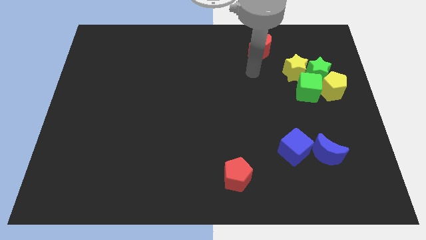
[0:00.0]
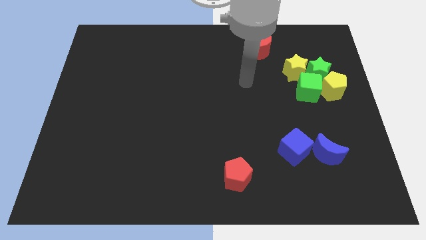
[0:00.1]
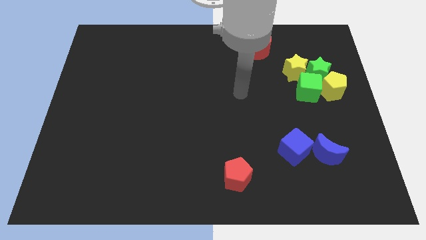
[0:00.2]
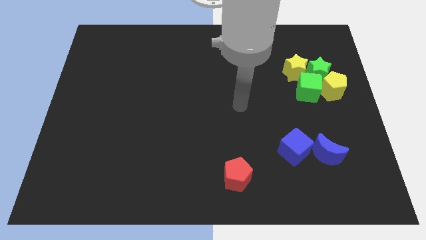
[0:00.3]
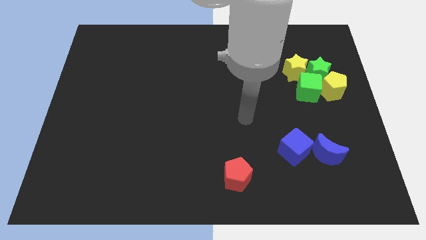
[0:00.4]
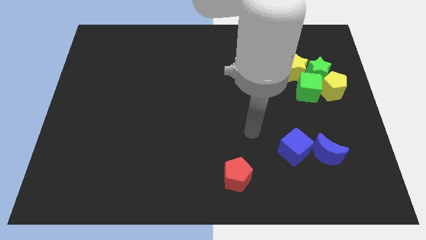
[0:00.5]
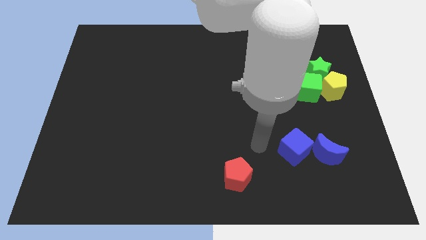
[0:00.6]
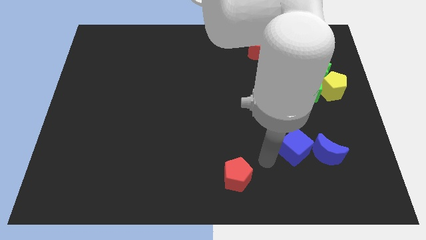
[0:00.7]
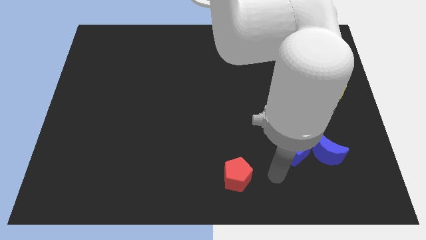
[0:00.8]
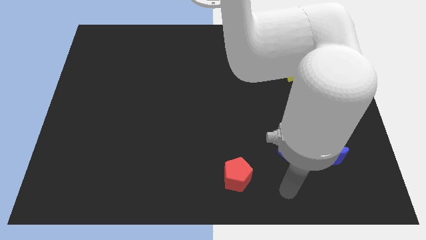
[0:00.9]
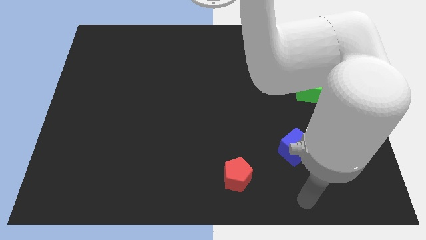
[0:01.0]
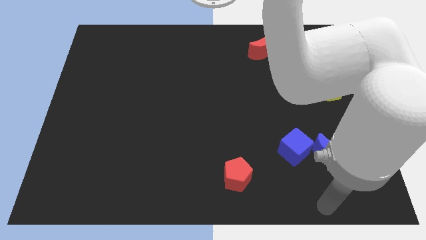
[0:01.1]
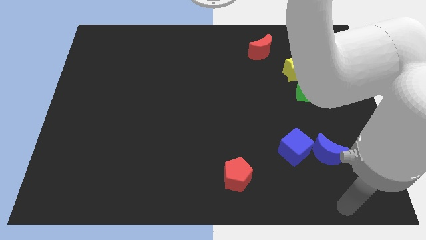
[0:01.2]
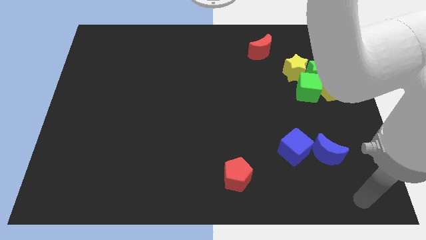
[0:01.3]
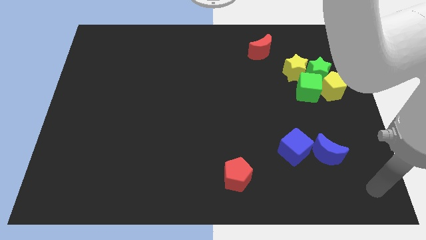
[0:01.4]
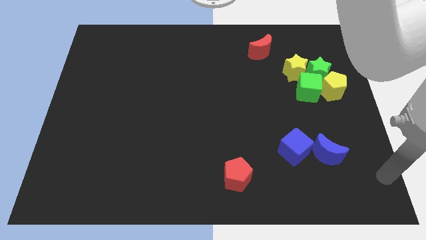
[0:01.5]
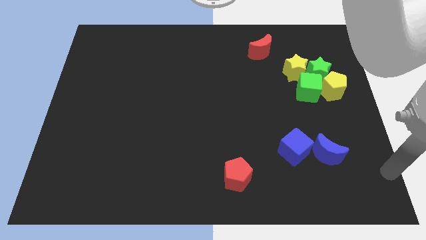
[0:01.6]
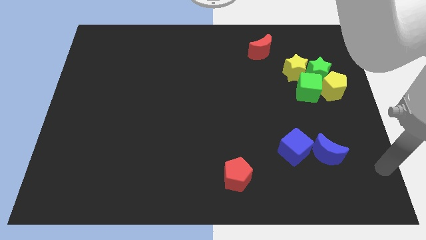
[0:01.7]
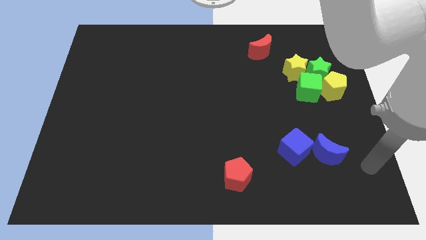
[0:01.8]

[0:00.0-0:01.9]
move yourself away from the red moon

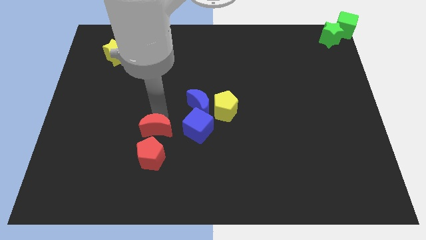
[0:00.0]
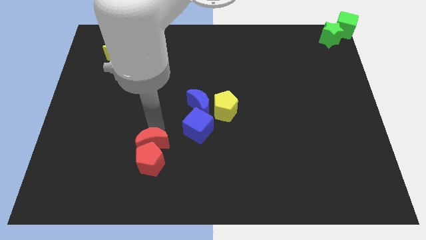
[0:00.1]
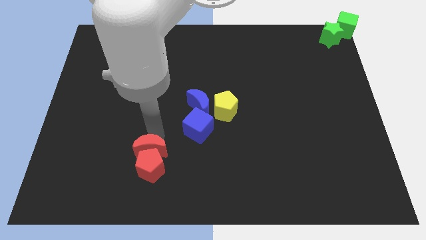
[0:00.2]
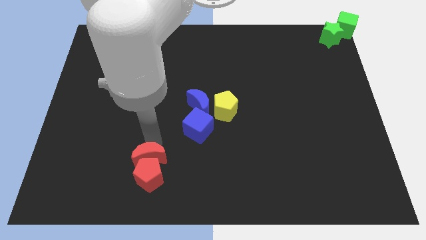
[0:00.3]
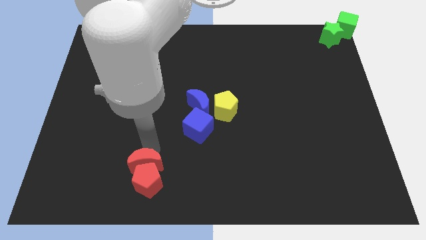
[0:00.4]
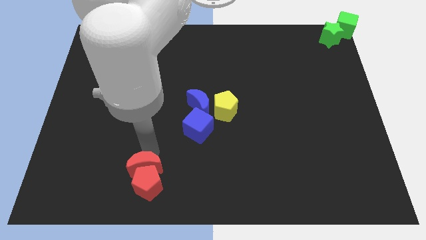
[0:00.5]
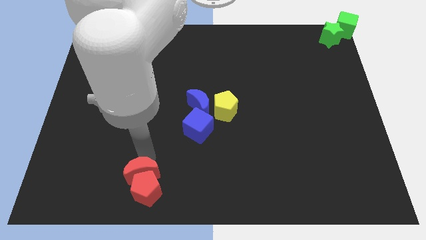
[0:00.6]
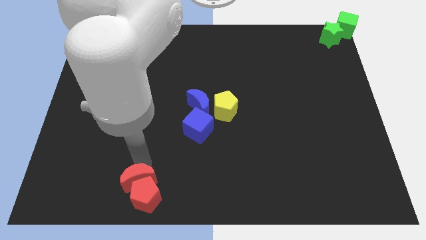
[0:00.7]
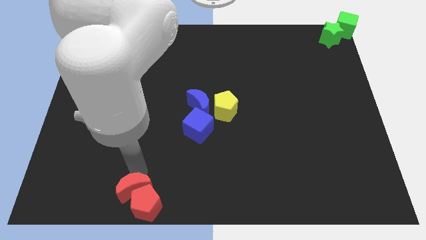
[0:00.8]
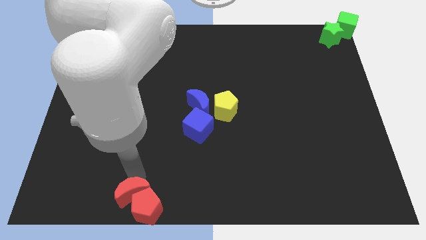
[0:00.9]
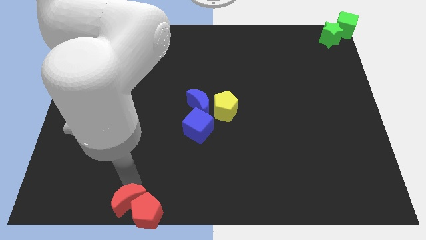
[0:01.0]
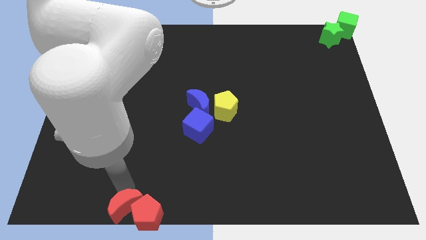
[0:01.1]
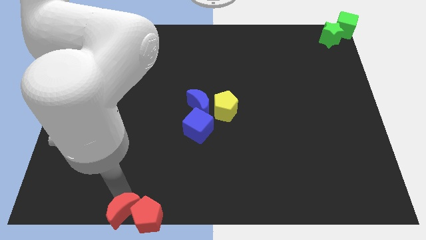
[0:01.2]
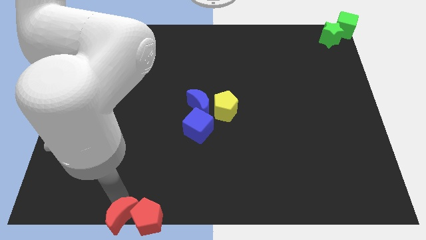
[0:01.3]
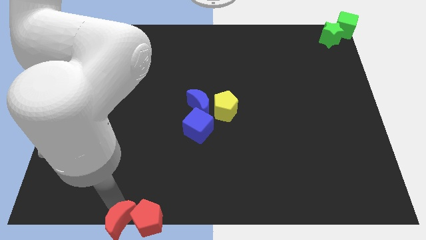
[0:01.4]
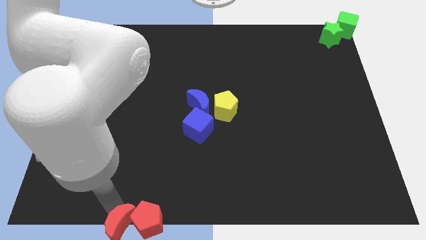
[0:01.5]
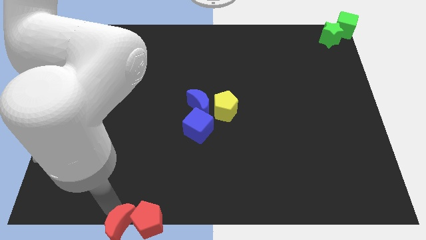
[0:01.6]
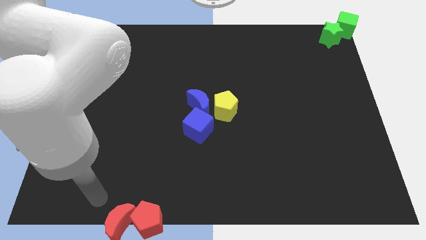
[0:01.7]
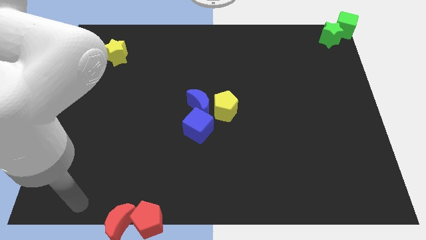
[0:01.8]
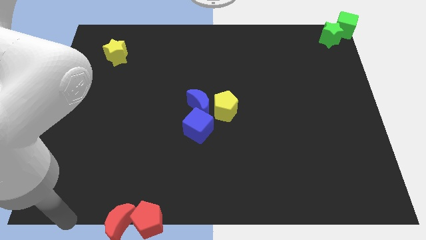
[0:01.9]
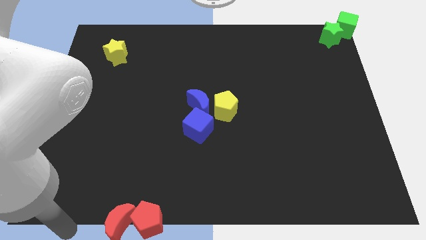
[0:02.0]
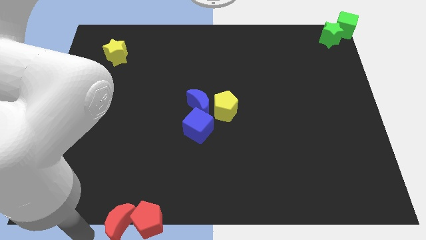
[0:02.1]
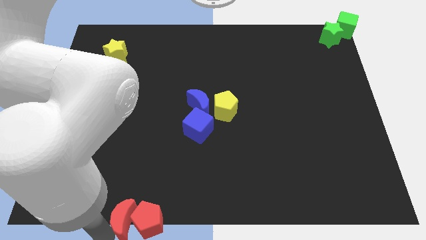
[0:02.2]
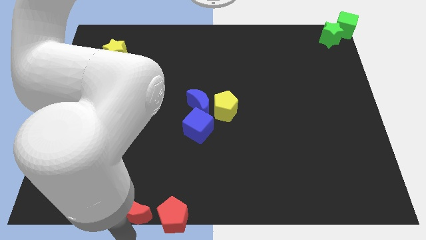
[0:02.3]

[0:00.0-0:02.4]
push two red blocks out of the board

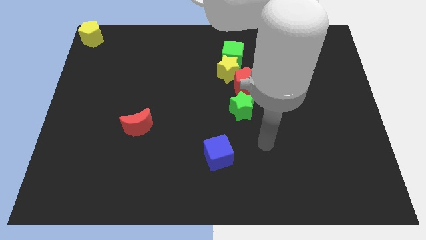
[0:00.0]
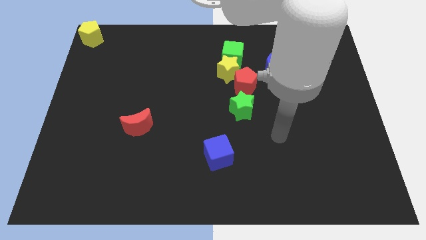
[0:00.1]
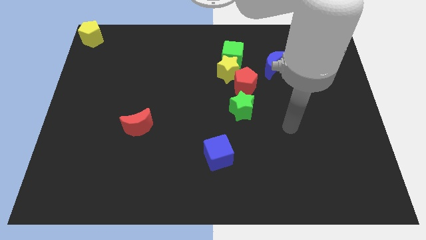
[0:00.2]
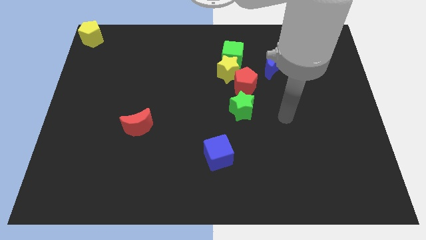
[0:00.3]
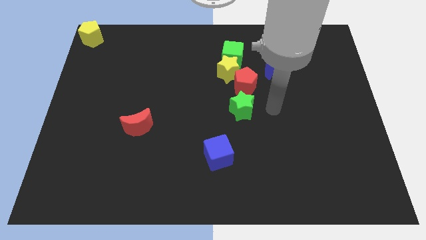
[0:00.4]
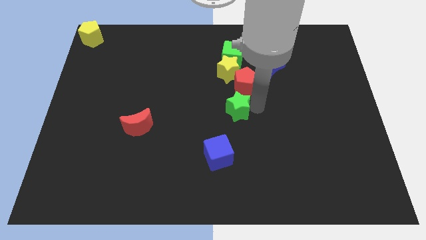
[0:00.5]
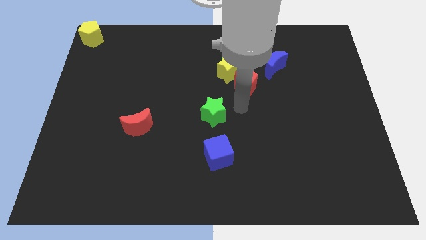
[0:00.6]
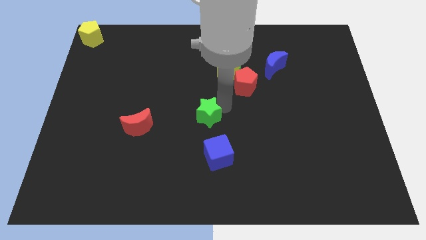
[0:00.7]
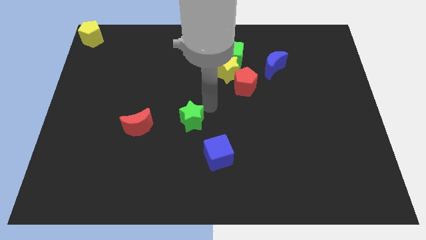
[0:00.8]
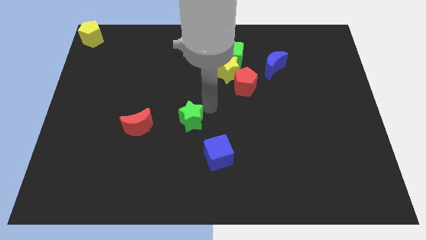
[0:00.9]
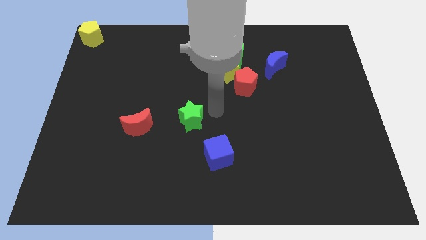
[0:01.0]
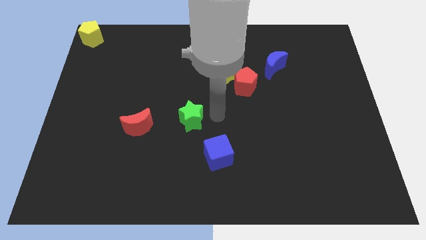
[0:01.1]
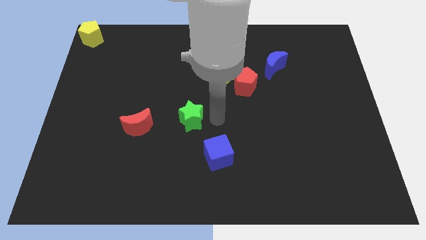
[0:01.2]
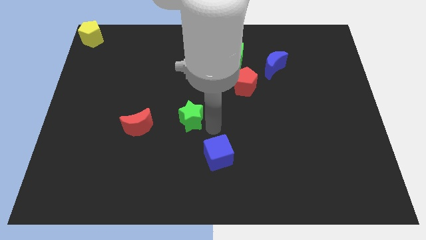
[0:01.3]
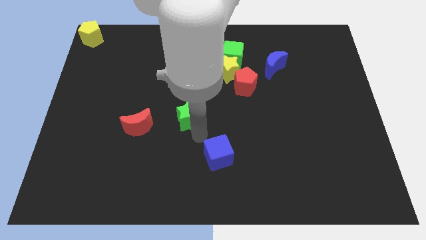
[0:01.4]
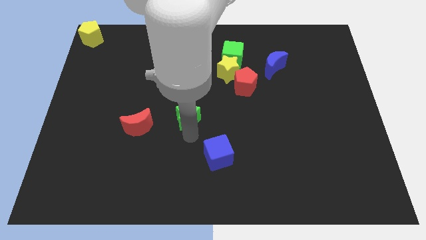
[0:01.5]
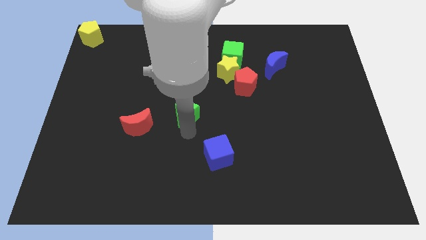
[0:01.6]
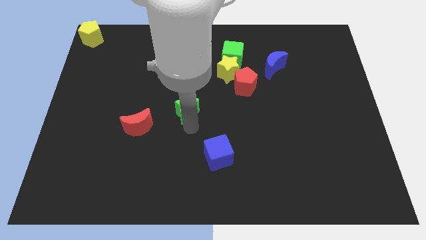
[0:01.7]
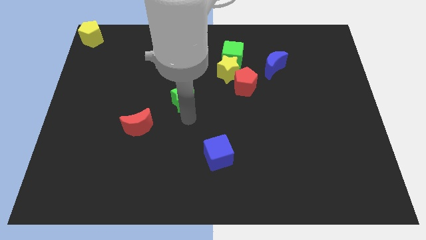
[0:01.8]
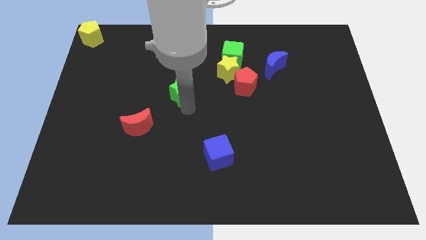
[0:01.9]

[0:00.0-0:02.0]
move the green sta diagonal to the blue cube

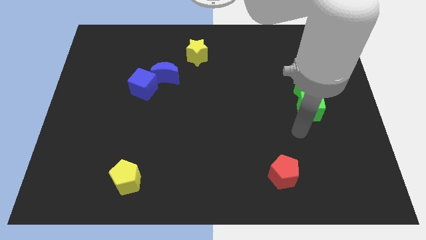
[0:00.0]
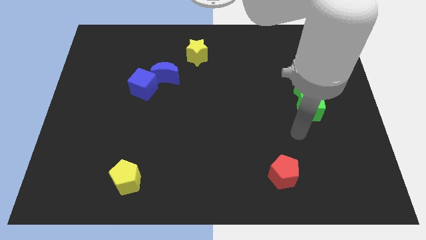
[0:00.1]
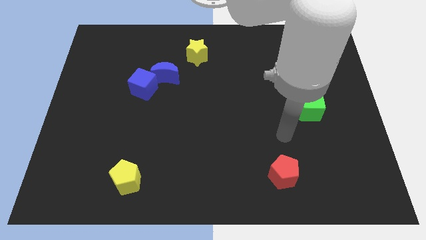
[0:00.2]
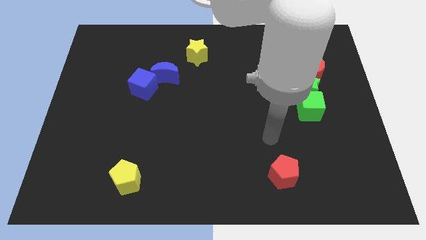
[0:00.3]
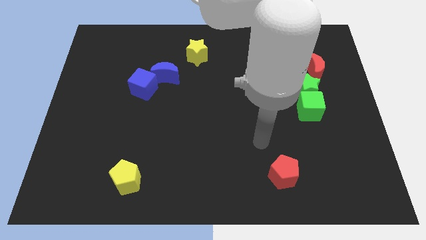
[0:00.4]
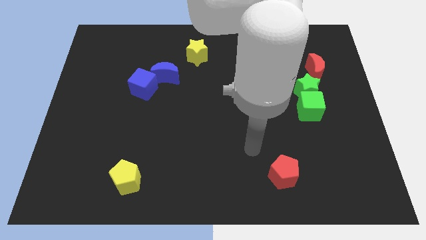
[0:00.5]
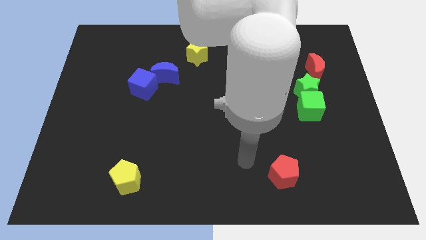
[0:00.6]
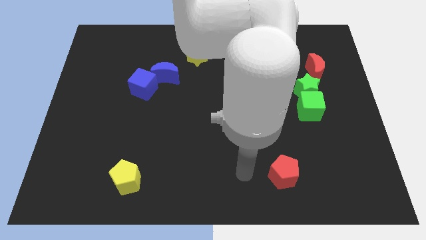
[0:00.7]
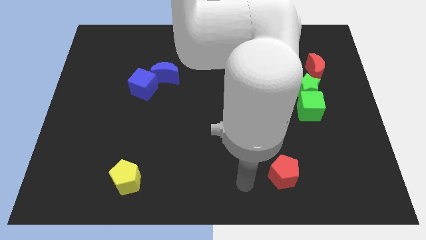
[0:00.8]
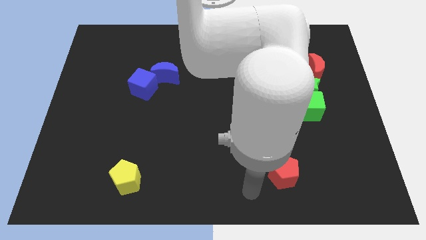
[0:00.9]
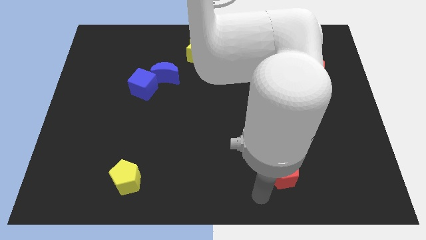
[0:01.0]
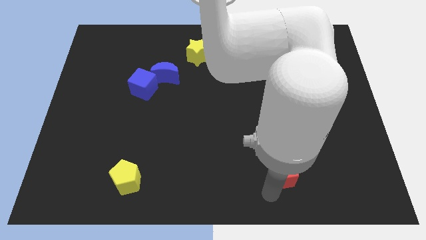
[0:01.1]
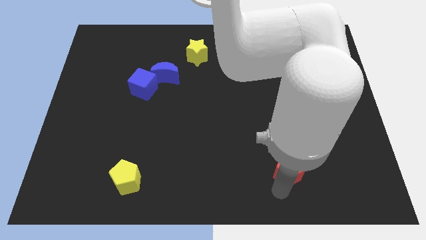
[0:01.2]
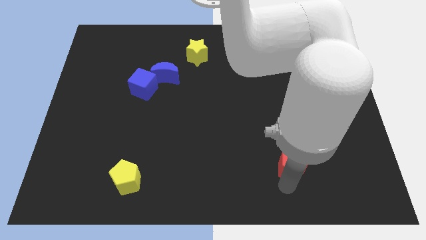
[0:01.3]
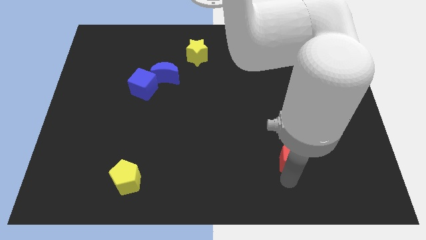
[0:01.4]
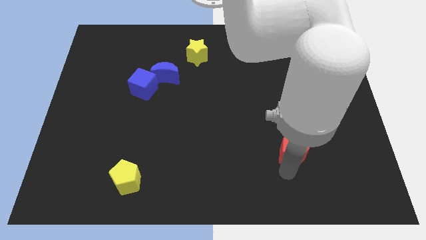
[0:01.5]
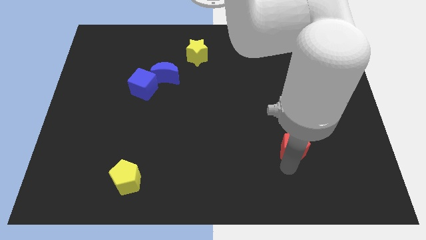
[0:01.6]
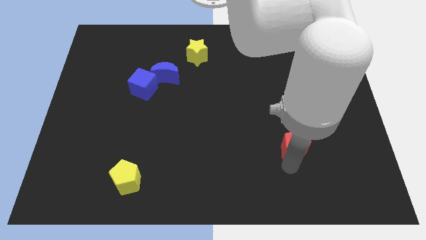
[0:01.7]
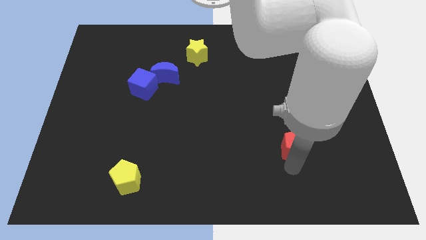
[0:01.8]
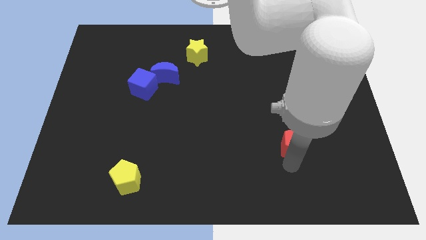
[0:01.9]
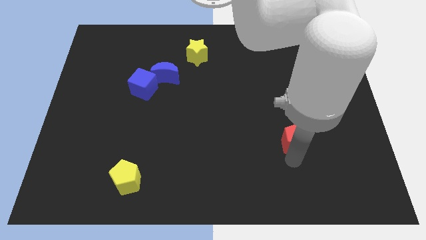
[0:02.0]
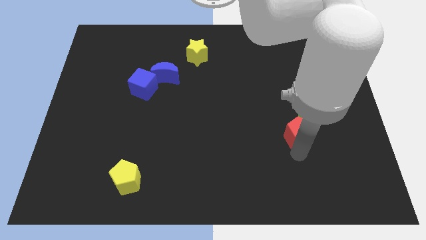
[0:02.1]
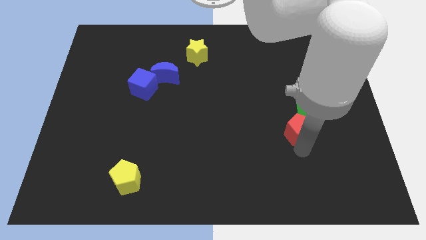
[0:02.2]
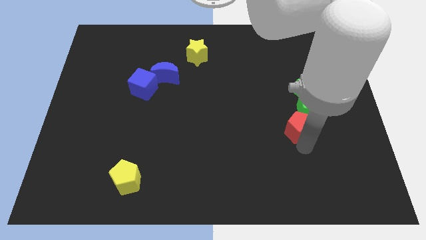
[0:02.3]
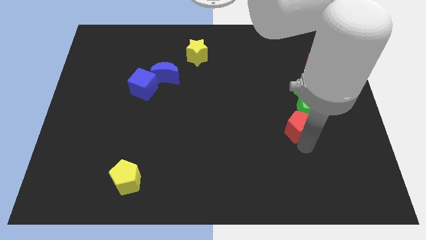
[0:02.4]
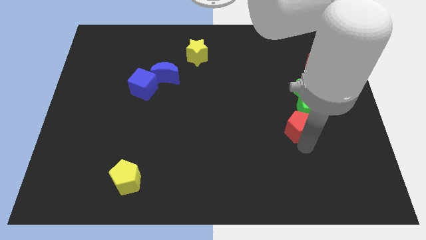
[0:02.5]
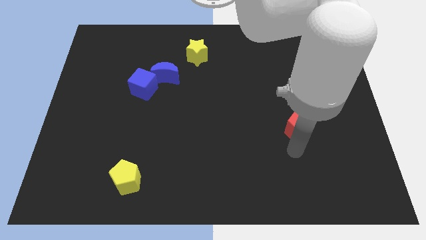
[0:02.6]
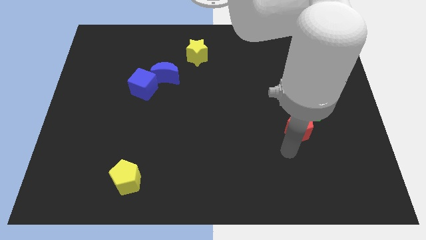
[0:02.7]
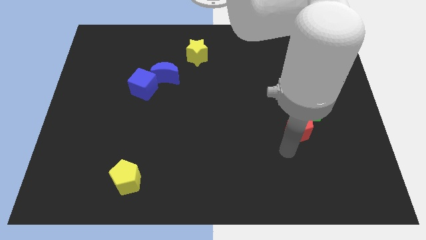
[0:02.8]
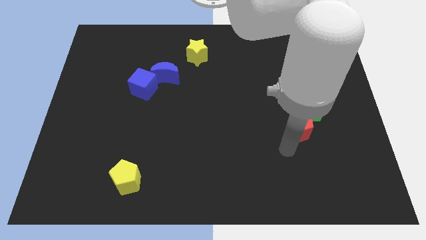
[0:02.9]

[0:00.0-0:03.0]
push the red pentagon towards the bottom of the green cube
